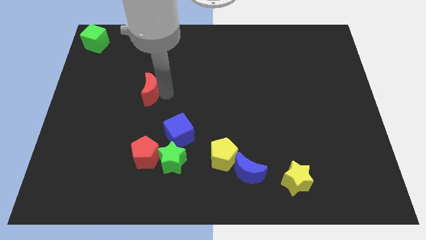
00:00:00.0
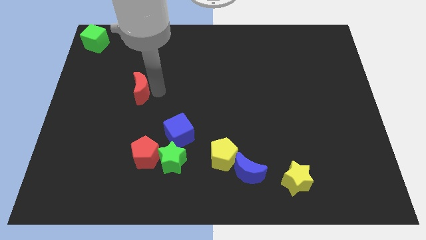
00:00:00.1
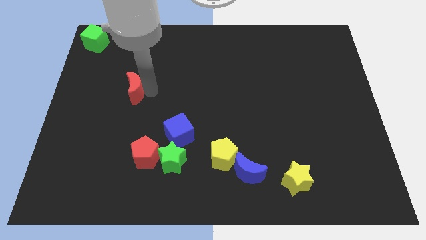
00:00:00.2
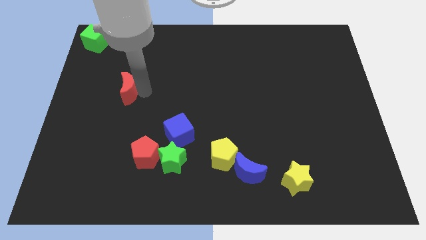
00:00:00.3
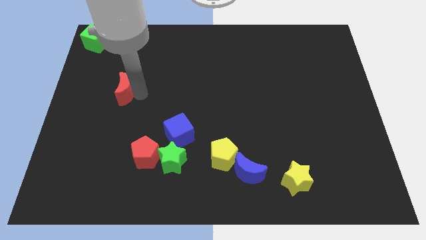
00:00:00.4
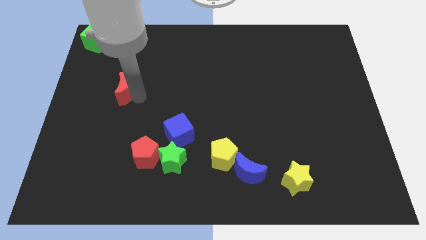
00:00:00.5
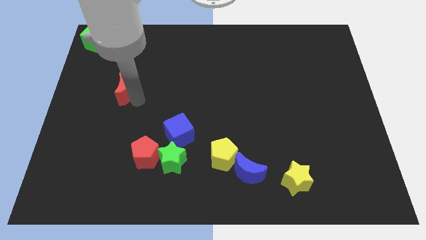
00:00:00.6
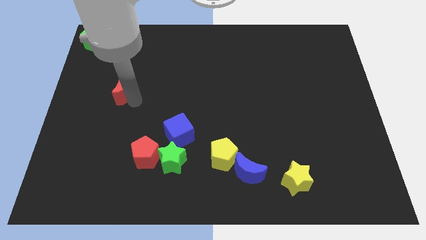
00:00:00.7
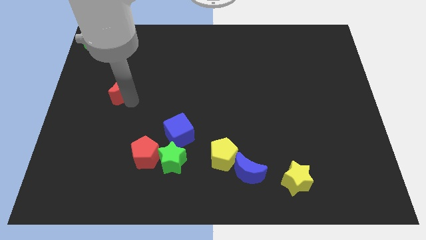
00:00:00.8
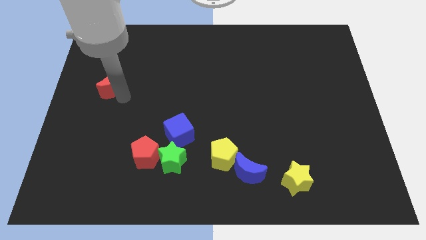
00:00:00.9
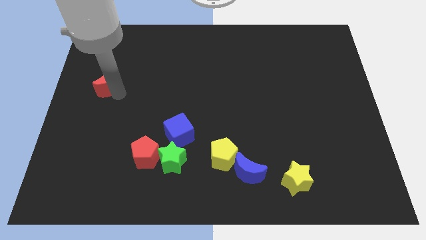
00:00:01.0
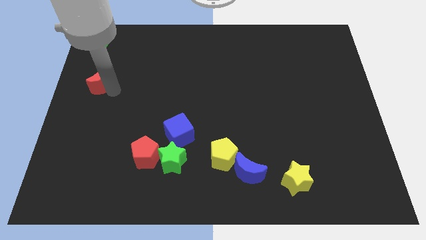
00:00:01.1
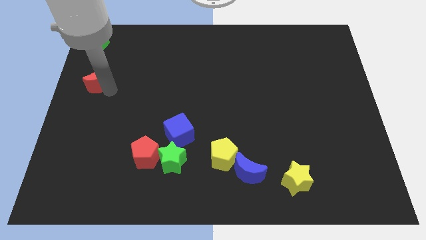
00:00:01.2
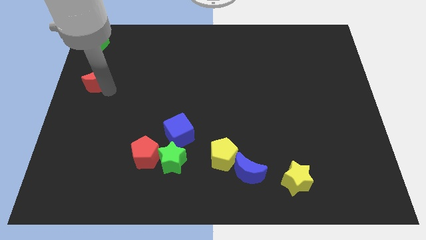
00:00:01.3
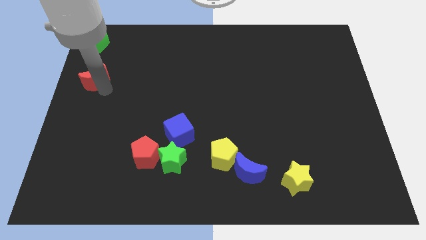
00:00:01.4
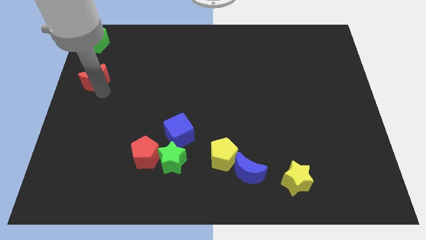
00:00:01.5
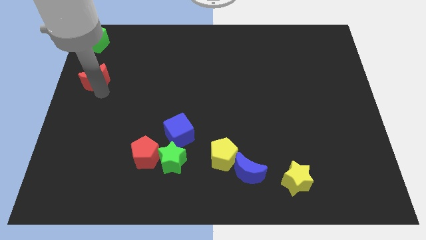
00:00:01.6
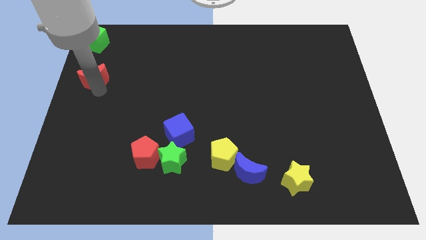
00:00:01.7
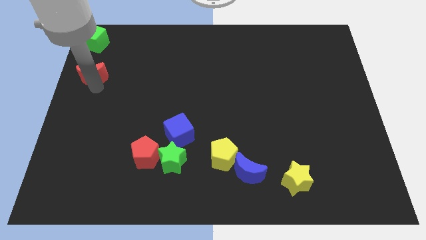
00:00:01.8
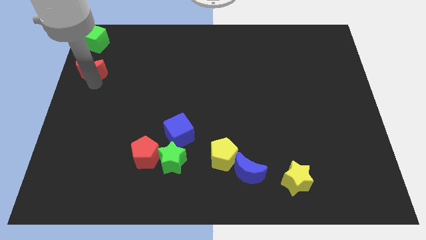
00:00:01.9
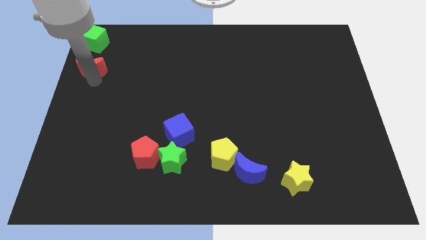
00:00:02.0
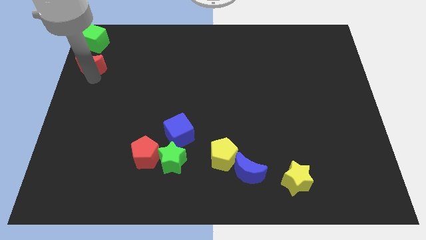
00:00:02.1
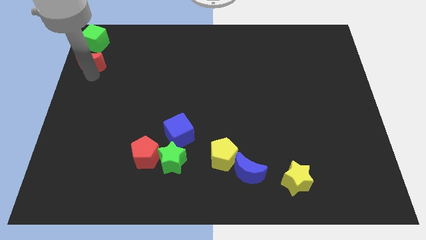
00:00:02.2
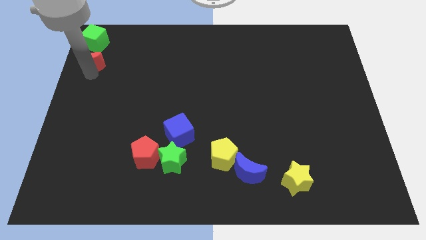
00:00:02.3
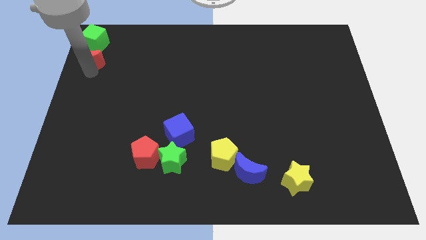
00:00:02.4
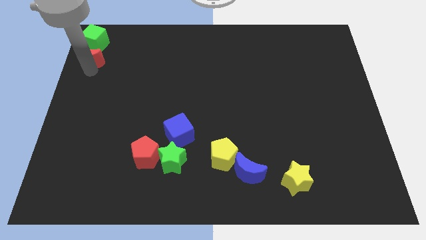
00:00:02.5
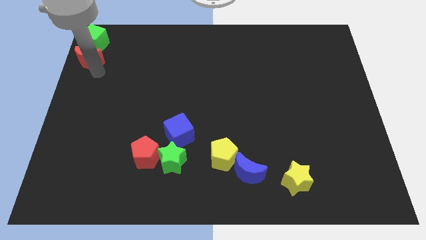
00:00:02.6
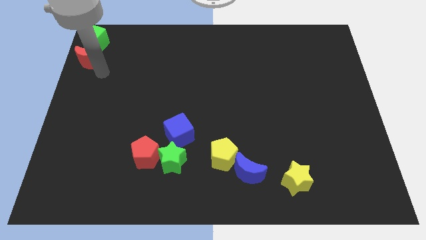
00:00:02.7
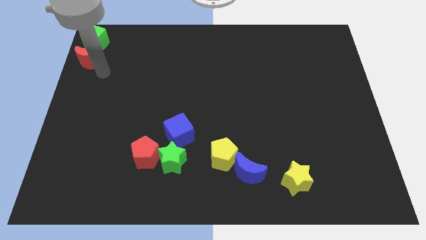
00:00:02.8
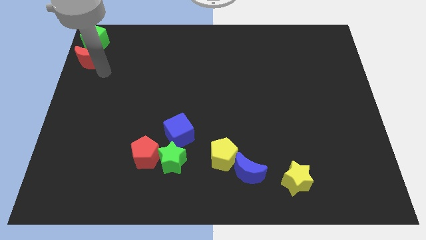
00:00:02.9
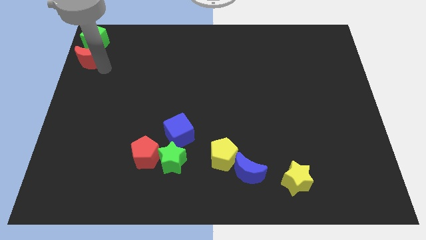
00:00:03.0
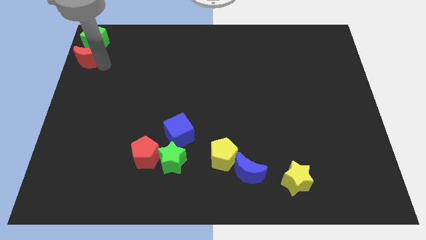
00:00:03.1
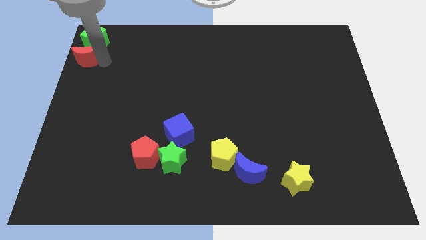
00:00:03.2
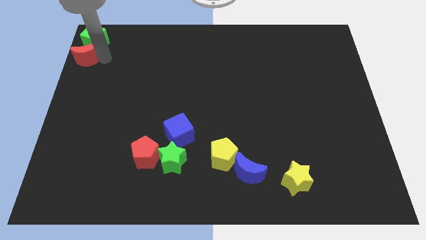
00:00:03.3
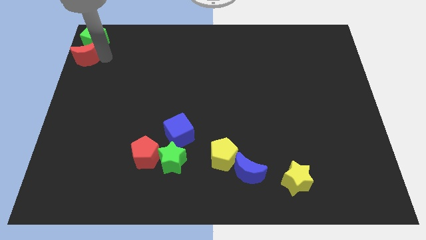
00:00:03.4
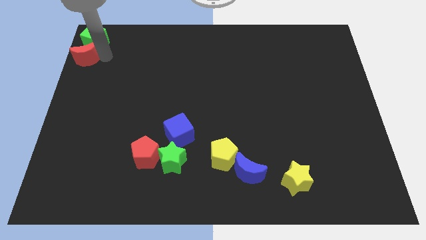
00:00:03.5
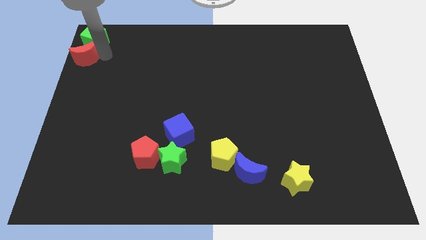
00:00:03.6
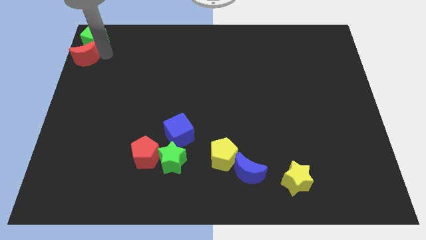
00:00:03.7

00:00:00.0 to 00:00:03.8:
push the red moon to the bottom side of the green cube

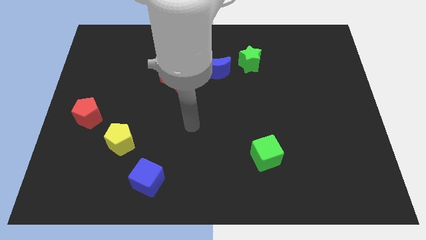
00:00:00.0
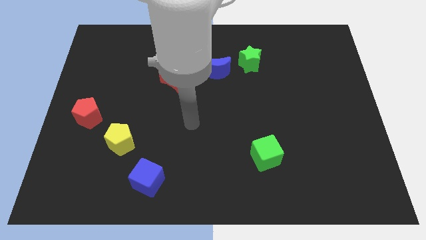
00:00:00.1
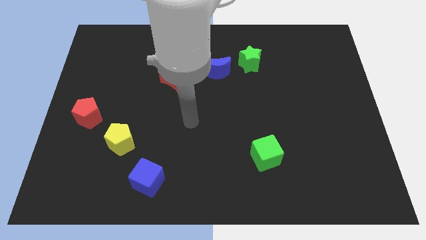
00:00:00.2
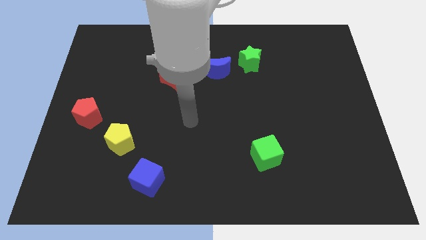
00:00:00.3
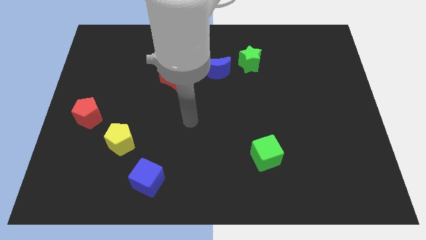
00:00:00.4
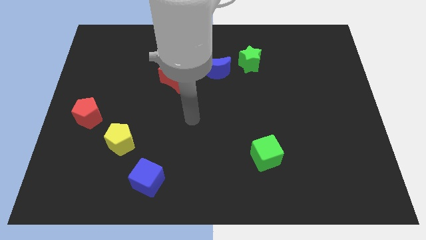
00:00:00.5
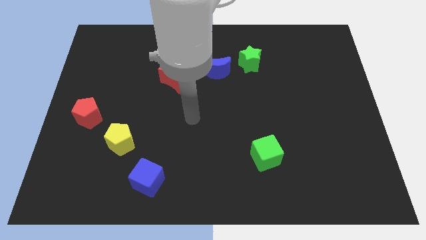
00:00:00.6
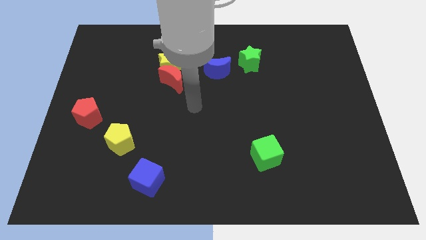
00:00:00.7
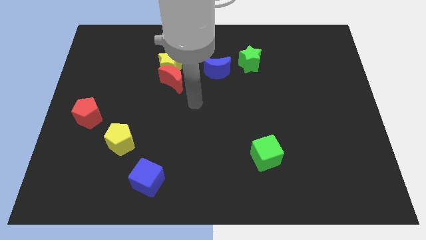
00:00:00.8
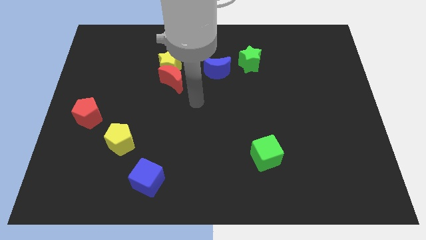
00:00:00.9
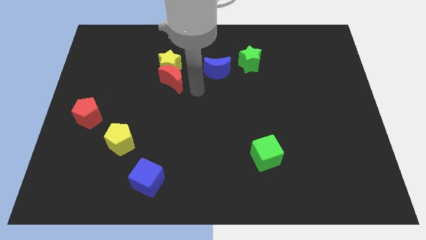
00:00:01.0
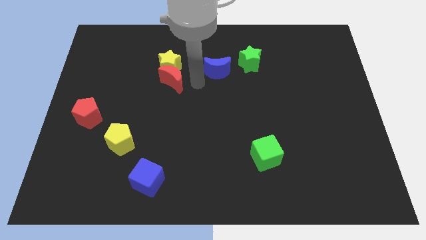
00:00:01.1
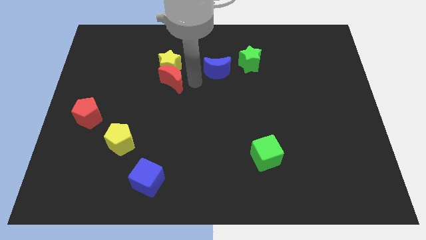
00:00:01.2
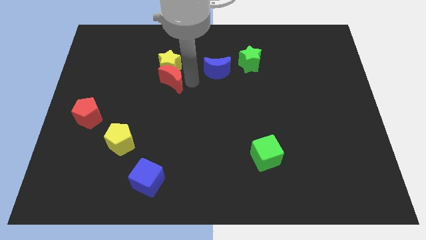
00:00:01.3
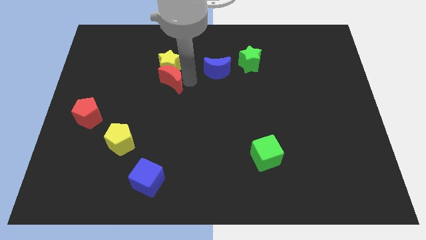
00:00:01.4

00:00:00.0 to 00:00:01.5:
move your arm to the right of the red crescent

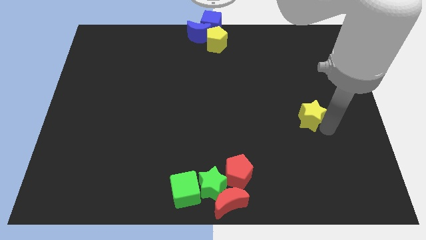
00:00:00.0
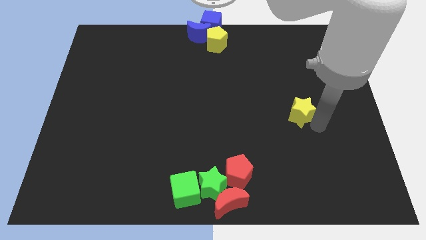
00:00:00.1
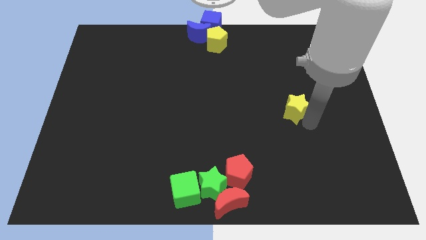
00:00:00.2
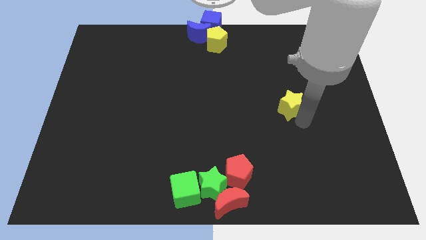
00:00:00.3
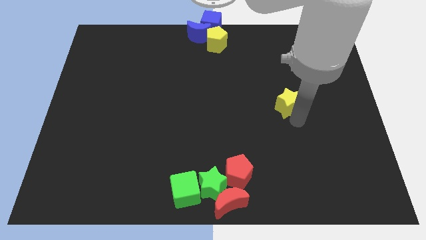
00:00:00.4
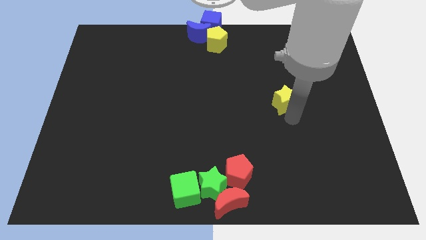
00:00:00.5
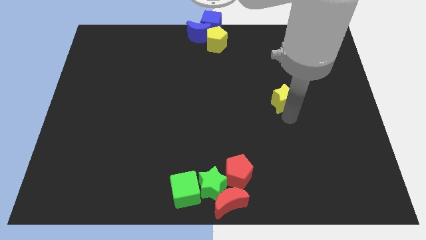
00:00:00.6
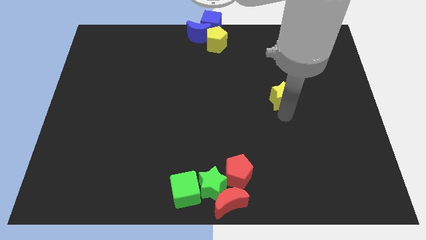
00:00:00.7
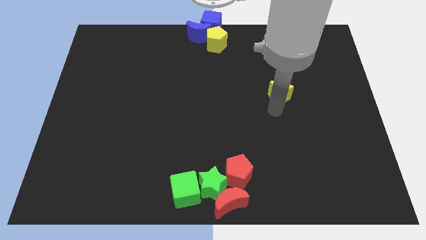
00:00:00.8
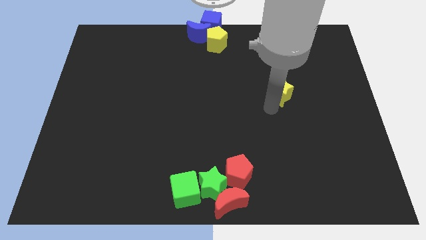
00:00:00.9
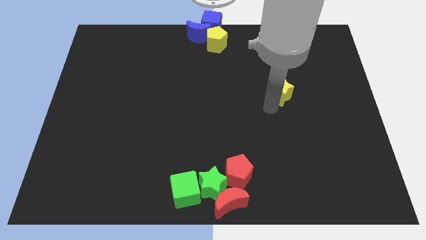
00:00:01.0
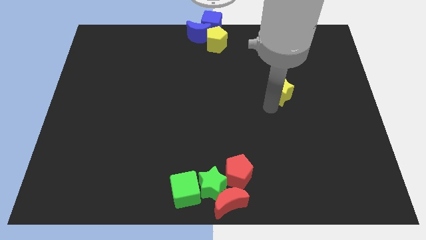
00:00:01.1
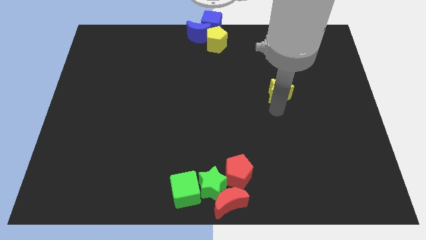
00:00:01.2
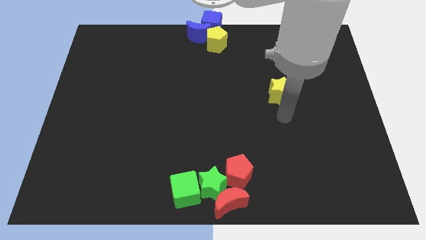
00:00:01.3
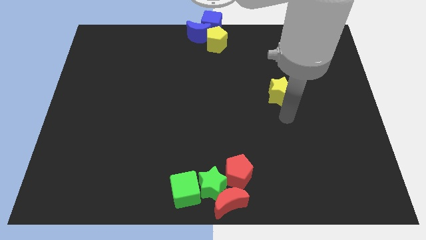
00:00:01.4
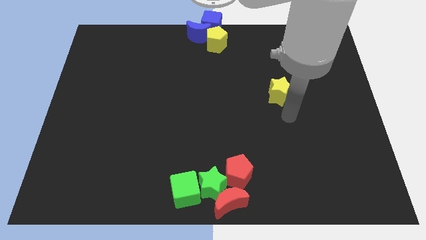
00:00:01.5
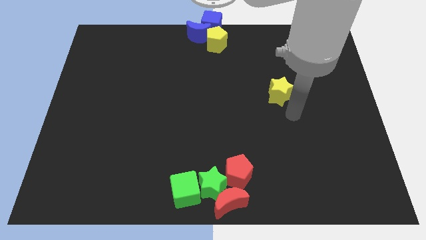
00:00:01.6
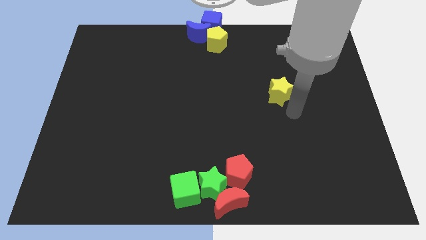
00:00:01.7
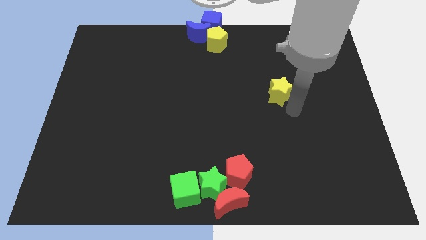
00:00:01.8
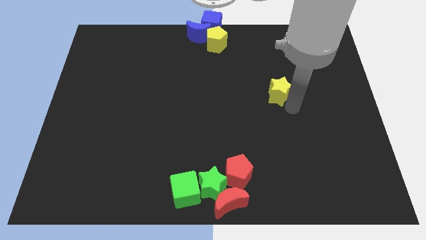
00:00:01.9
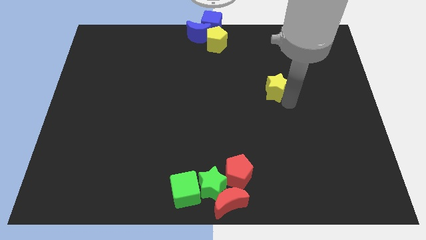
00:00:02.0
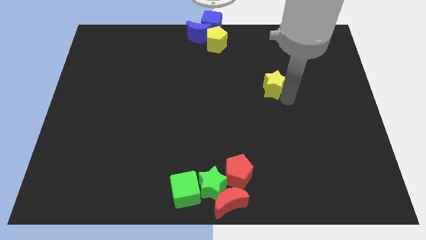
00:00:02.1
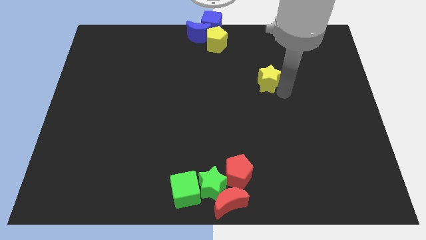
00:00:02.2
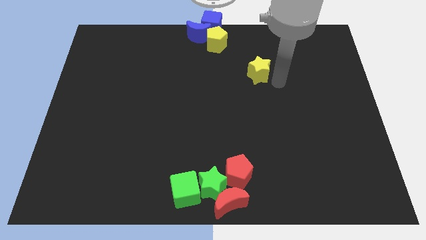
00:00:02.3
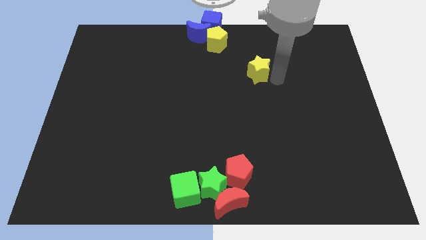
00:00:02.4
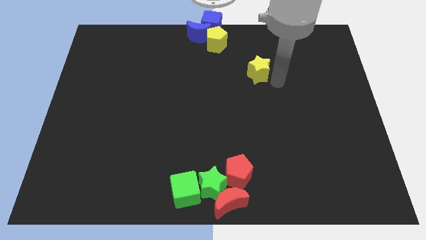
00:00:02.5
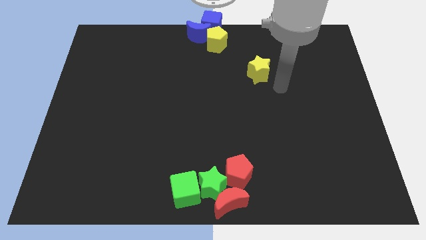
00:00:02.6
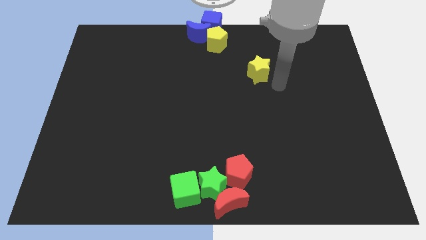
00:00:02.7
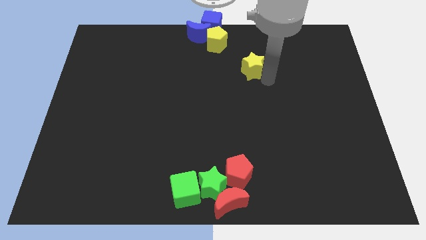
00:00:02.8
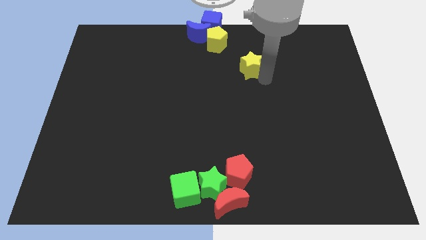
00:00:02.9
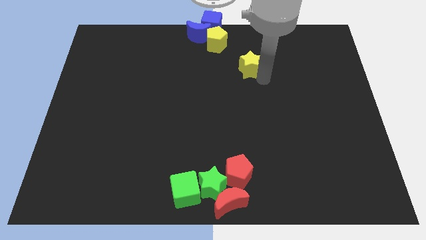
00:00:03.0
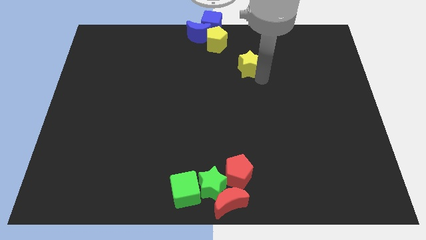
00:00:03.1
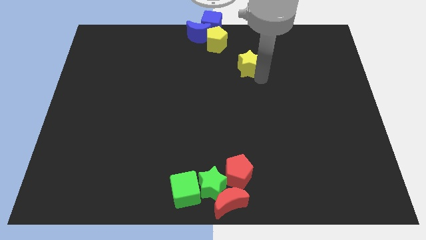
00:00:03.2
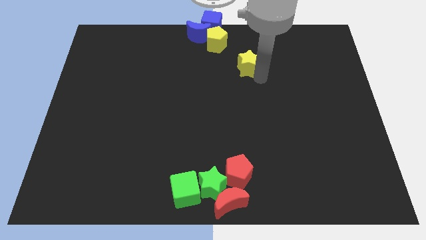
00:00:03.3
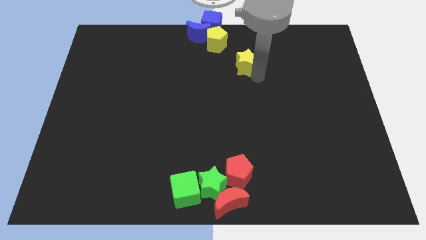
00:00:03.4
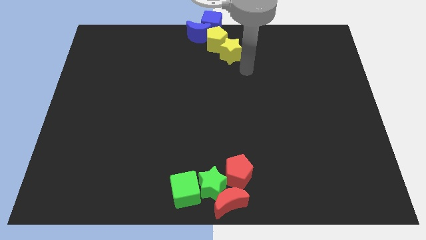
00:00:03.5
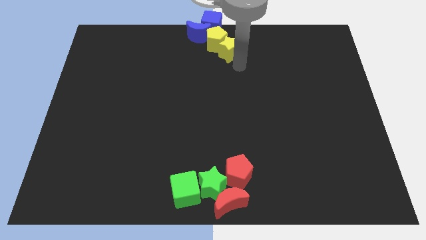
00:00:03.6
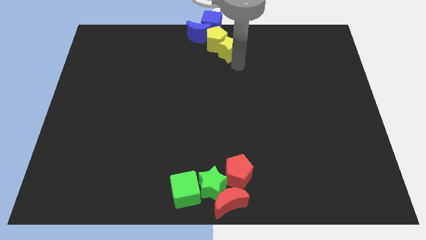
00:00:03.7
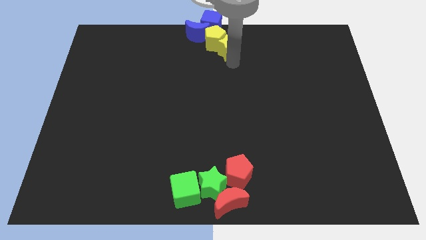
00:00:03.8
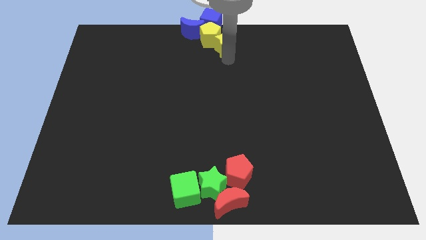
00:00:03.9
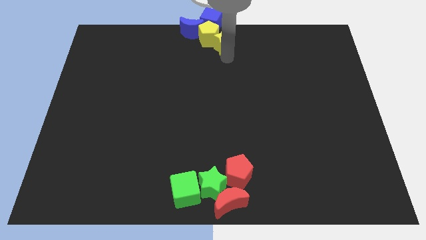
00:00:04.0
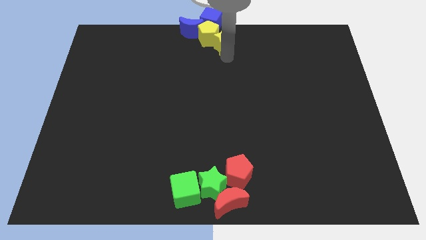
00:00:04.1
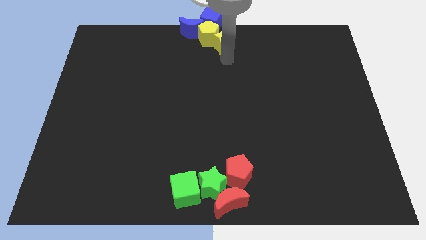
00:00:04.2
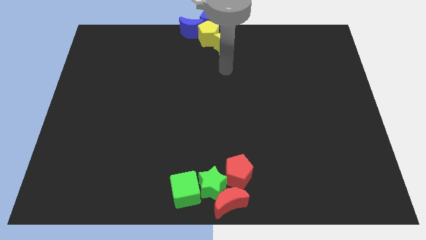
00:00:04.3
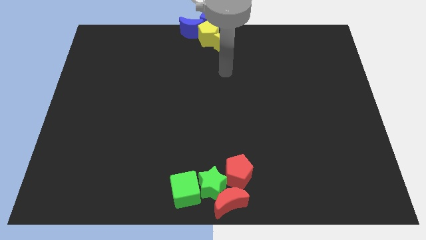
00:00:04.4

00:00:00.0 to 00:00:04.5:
push the yellow star into the yellow pentagon
